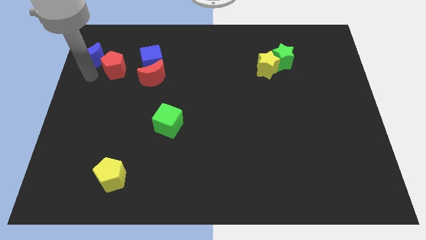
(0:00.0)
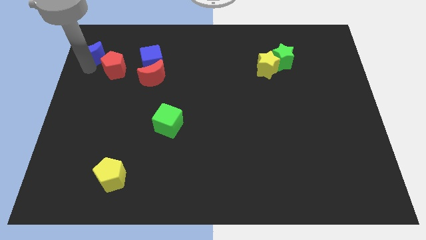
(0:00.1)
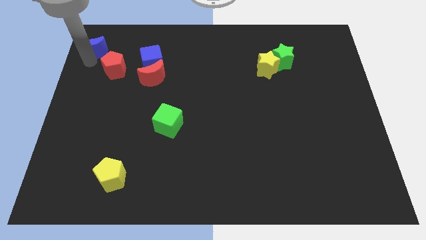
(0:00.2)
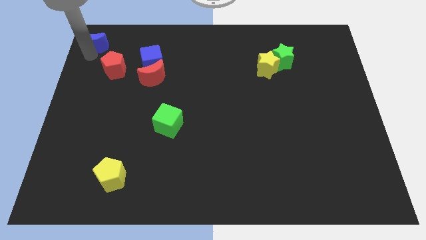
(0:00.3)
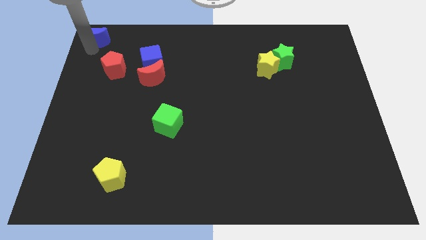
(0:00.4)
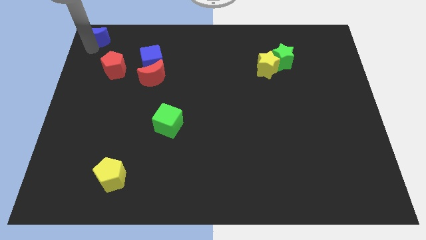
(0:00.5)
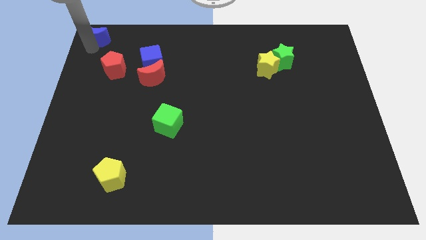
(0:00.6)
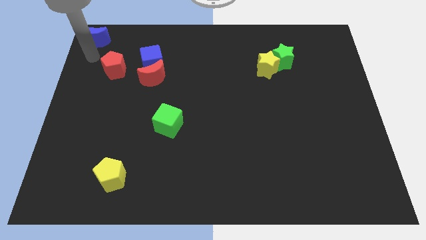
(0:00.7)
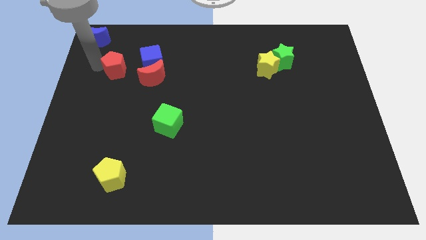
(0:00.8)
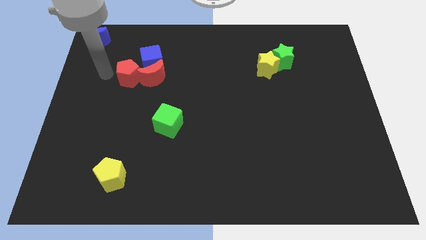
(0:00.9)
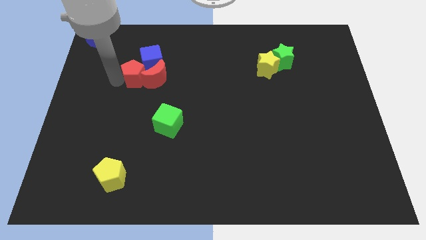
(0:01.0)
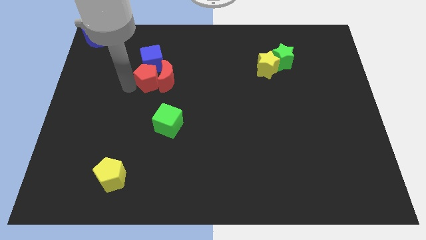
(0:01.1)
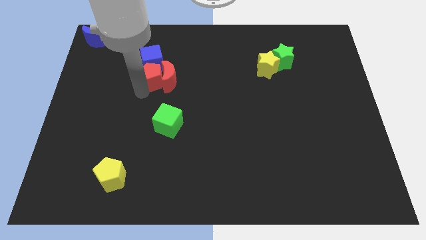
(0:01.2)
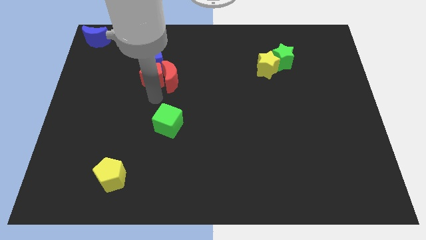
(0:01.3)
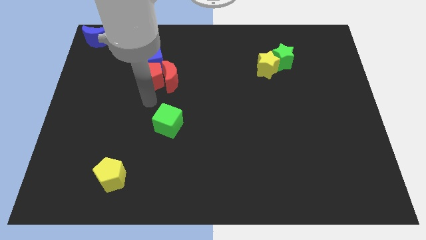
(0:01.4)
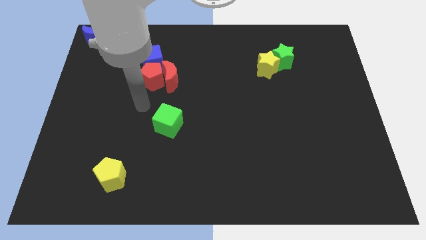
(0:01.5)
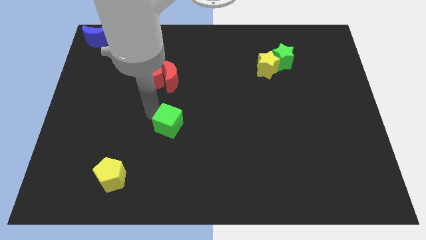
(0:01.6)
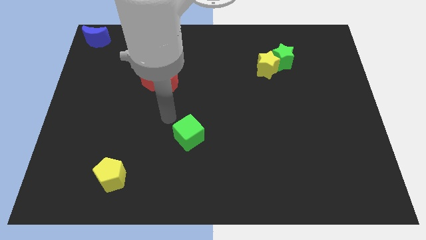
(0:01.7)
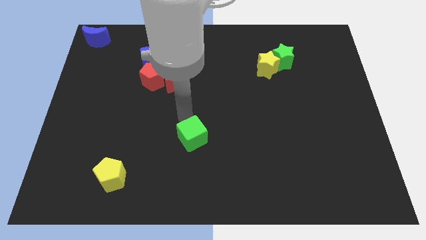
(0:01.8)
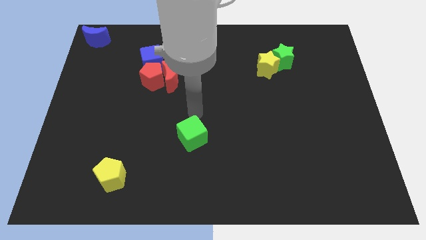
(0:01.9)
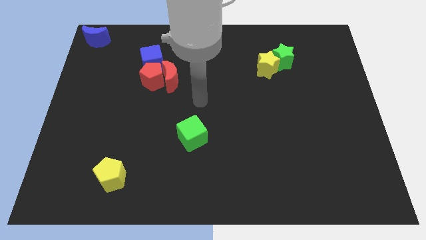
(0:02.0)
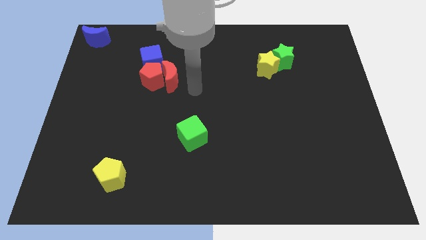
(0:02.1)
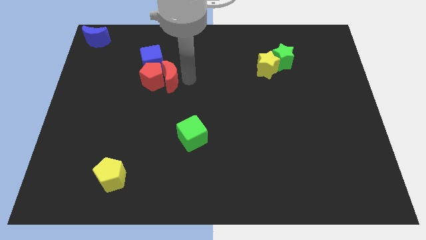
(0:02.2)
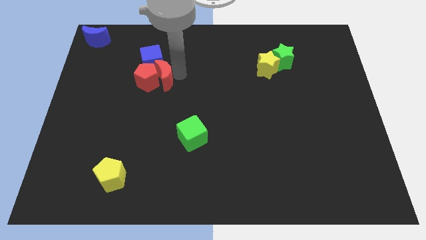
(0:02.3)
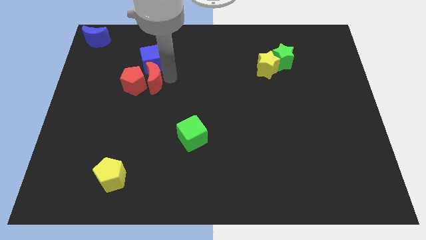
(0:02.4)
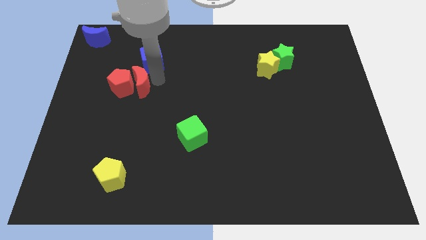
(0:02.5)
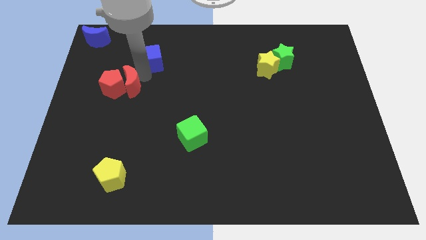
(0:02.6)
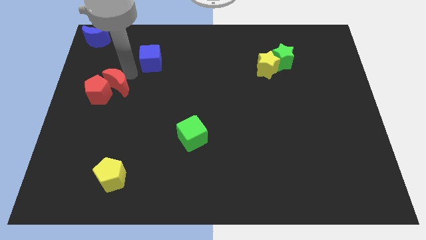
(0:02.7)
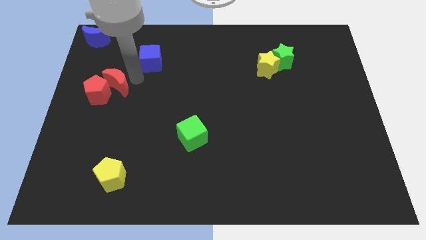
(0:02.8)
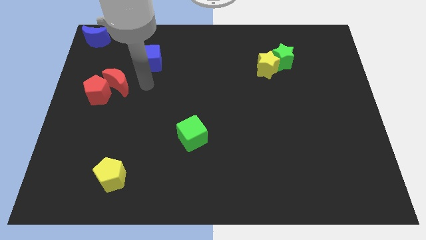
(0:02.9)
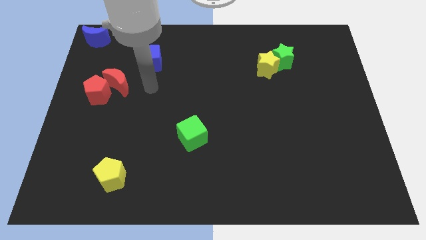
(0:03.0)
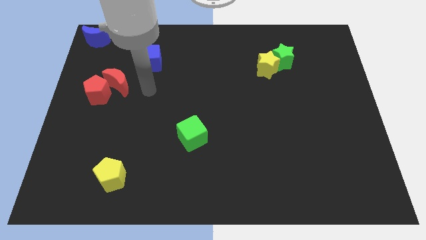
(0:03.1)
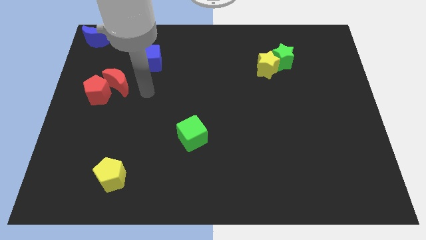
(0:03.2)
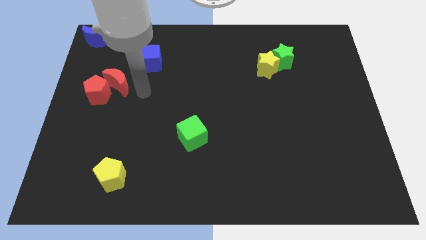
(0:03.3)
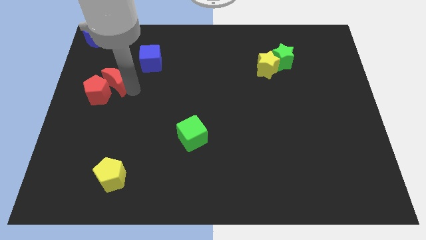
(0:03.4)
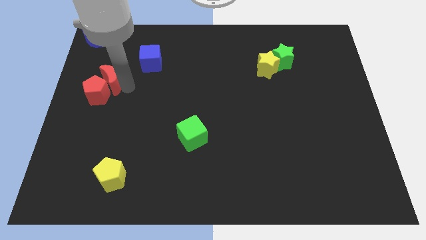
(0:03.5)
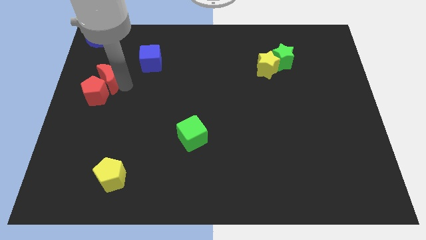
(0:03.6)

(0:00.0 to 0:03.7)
place the red blocks in between blue moon and yellow pentagon

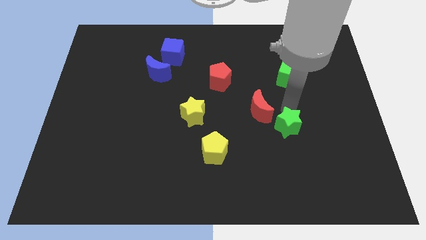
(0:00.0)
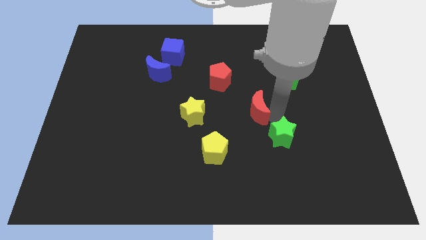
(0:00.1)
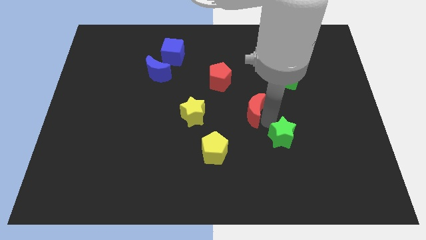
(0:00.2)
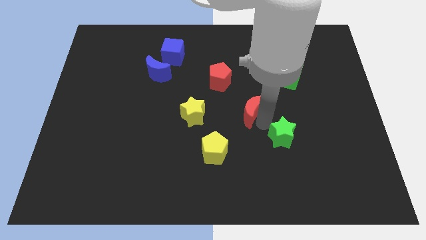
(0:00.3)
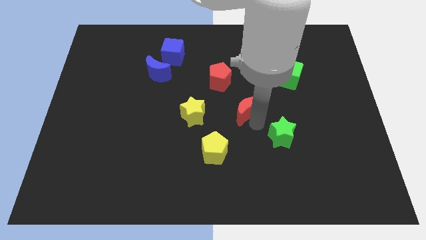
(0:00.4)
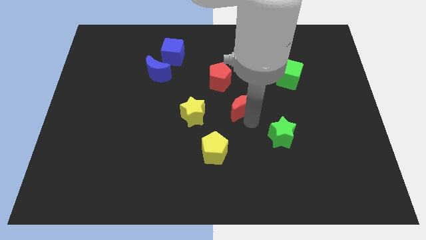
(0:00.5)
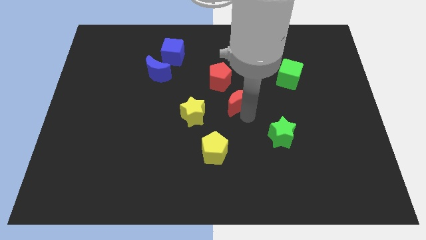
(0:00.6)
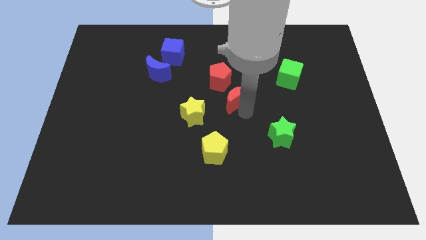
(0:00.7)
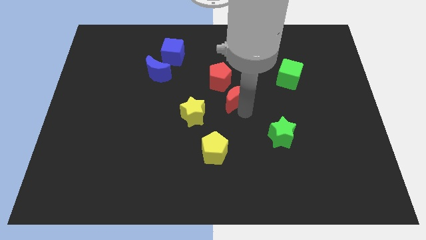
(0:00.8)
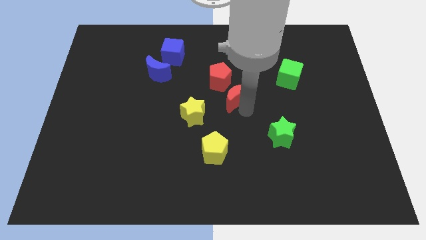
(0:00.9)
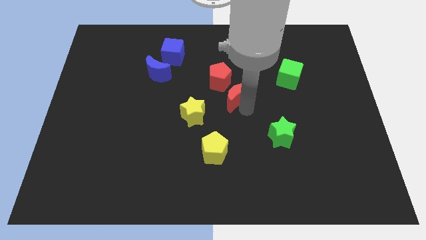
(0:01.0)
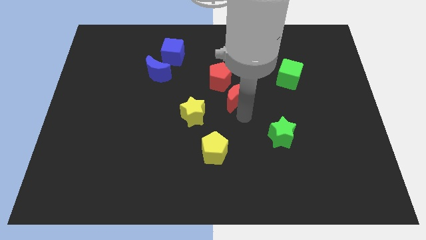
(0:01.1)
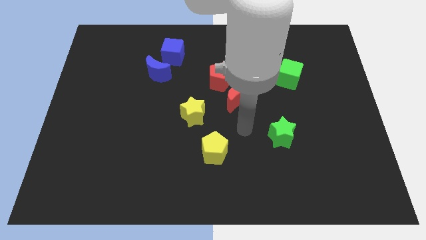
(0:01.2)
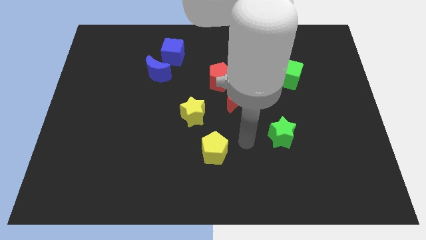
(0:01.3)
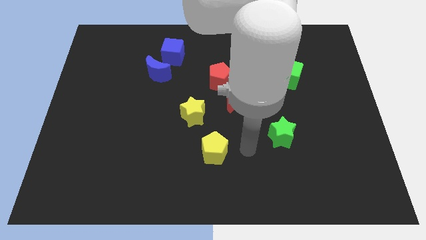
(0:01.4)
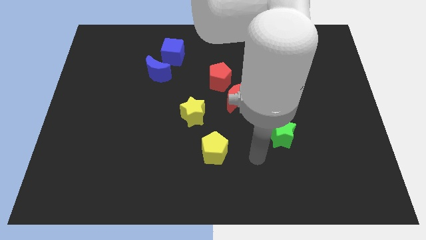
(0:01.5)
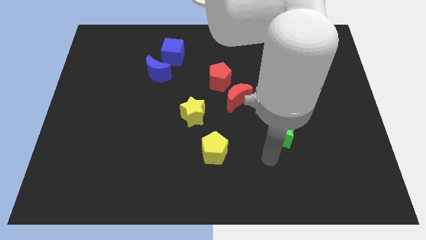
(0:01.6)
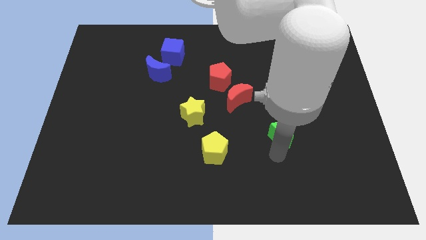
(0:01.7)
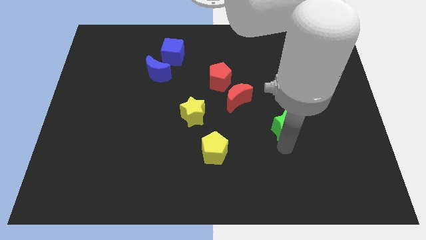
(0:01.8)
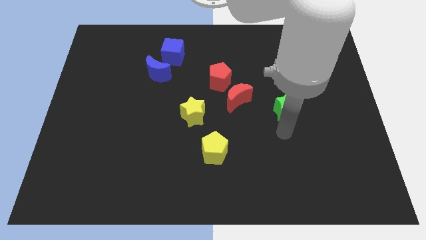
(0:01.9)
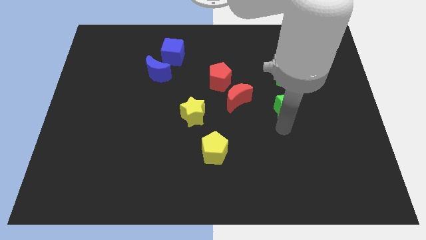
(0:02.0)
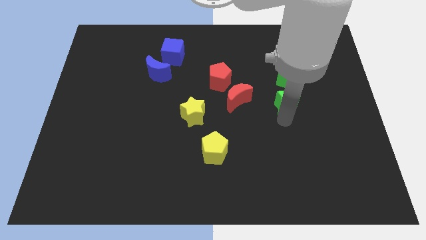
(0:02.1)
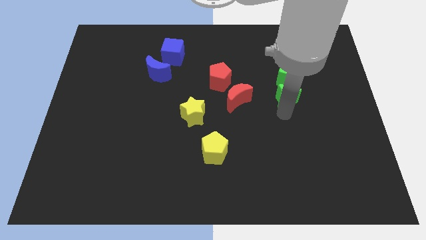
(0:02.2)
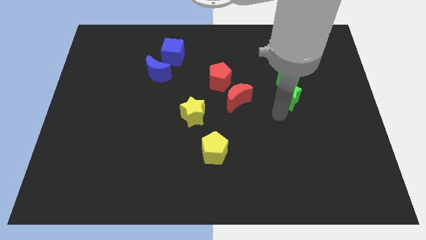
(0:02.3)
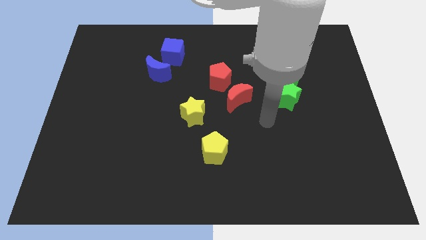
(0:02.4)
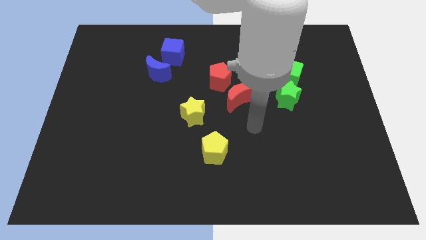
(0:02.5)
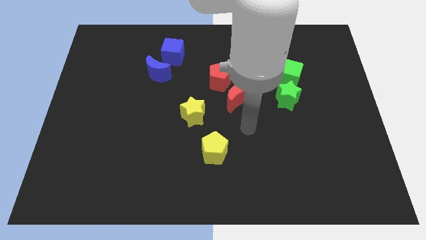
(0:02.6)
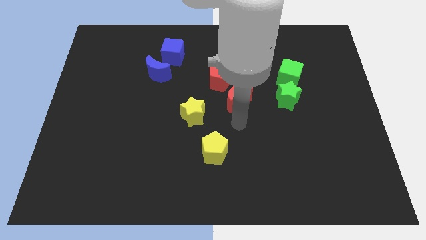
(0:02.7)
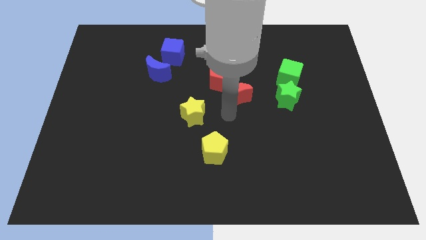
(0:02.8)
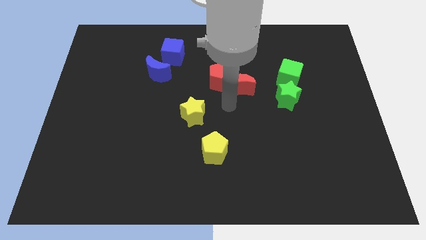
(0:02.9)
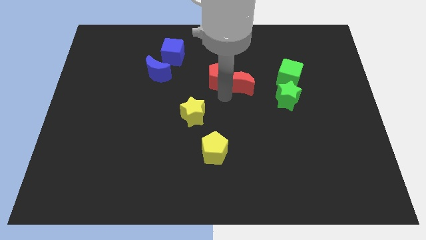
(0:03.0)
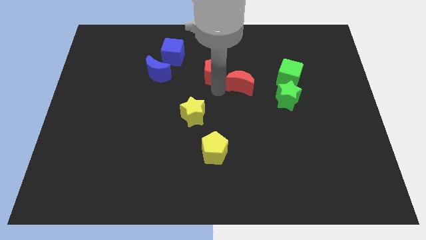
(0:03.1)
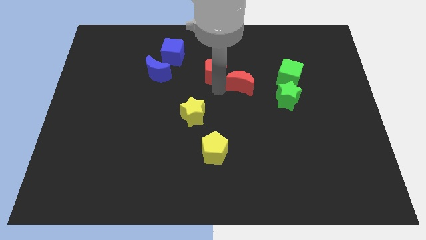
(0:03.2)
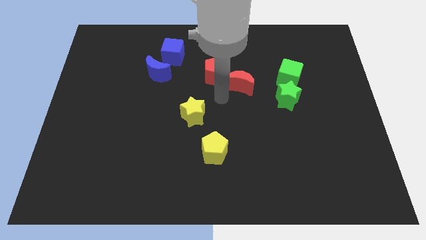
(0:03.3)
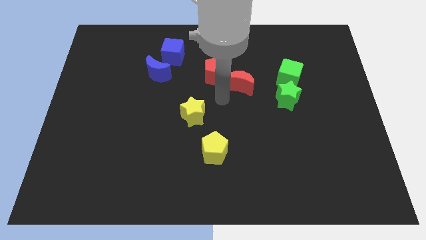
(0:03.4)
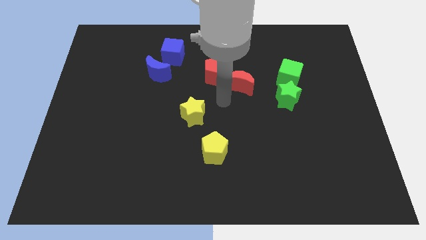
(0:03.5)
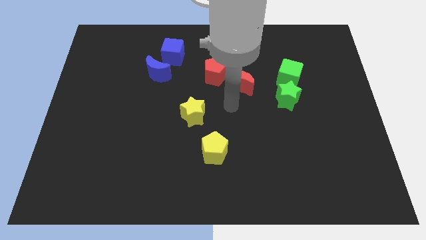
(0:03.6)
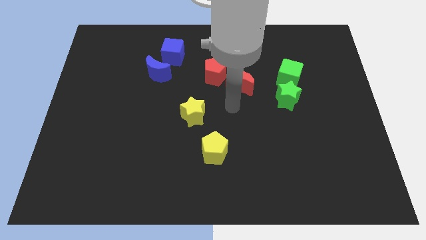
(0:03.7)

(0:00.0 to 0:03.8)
make the red crescent into the red pentagon

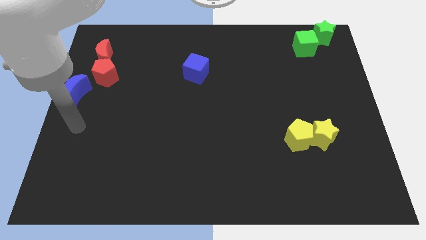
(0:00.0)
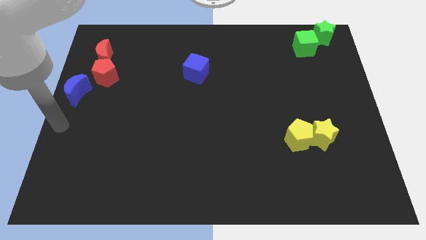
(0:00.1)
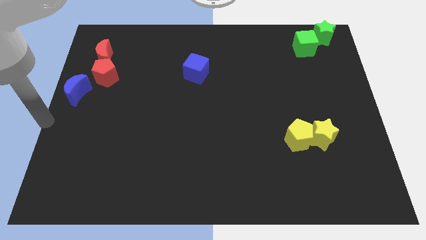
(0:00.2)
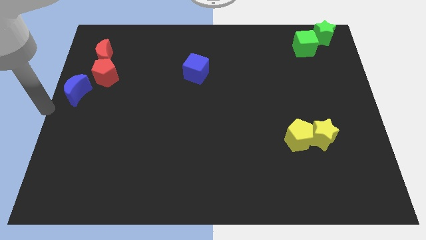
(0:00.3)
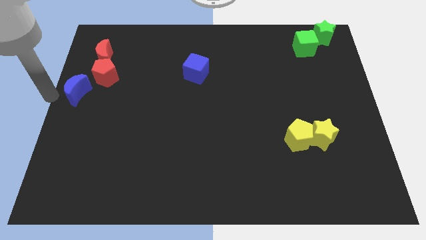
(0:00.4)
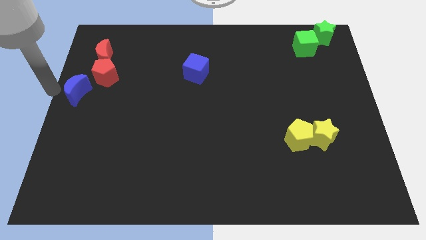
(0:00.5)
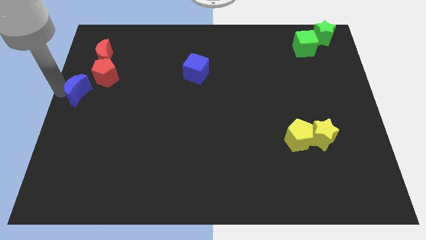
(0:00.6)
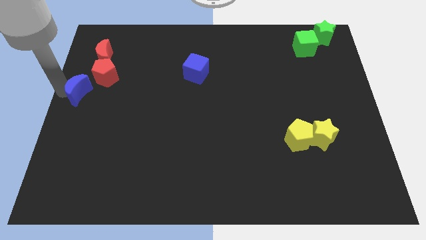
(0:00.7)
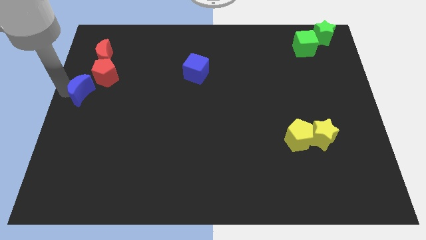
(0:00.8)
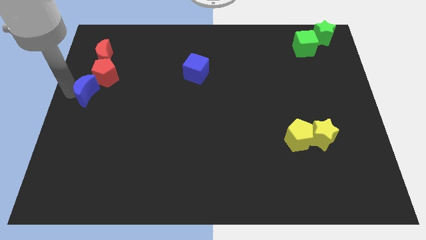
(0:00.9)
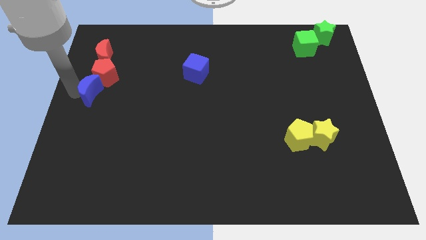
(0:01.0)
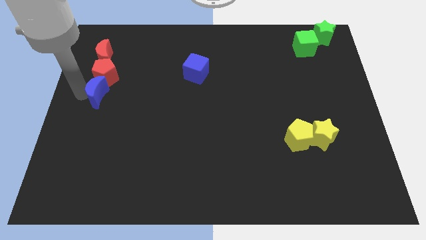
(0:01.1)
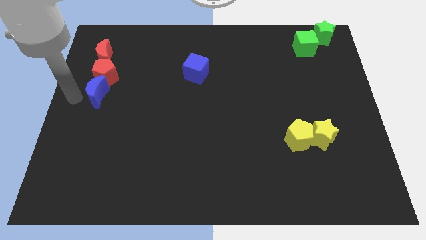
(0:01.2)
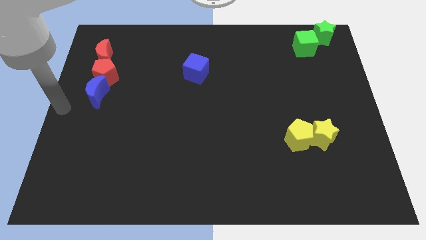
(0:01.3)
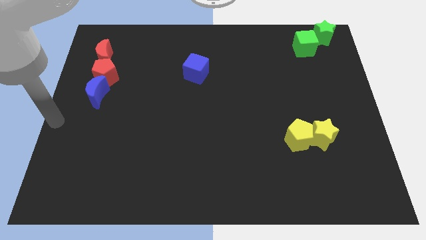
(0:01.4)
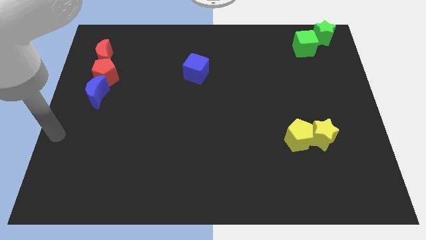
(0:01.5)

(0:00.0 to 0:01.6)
move the blue crescent below to the red pentagon
